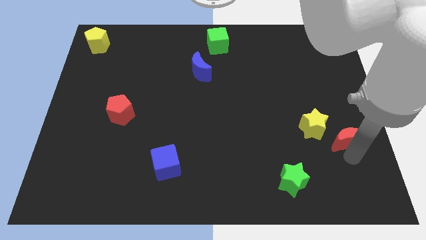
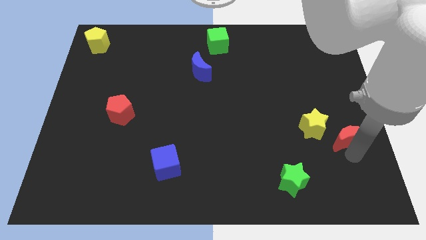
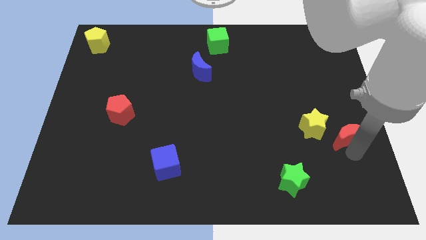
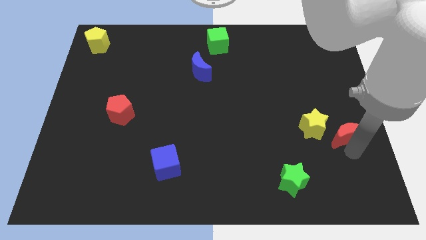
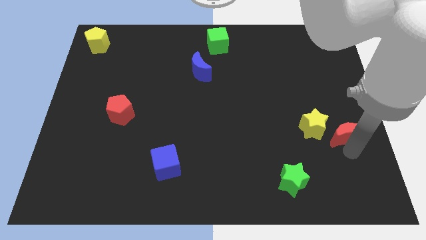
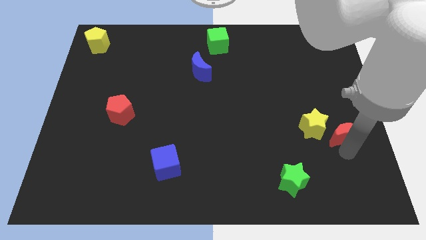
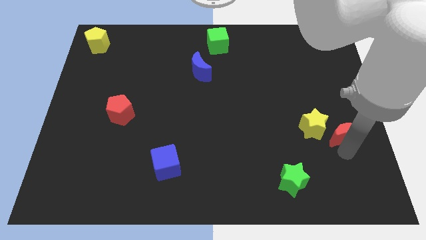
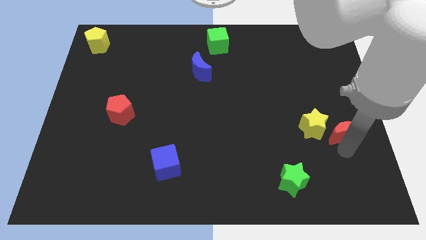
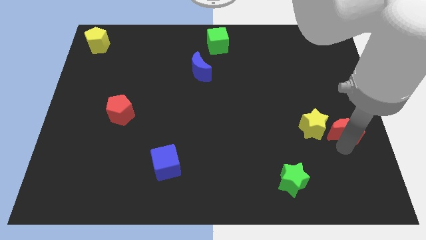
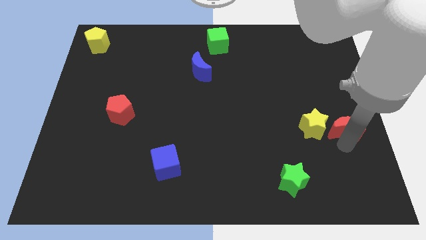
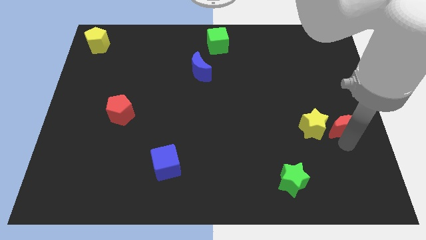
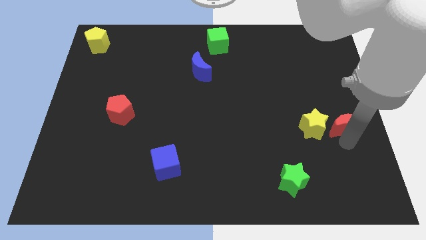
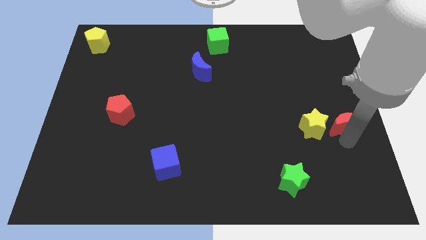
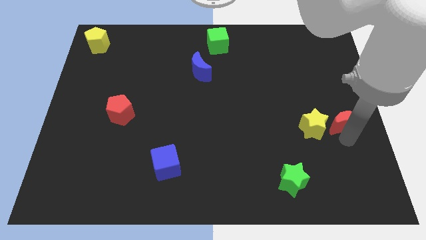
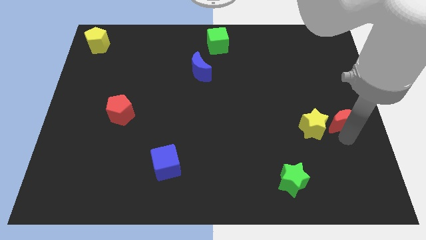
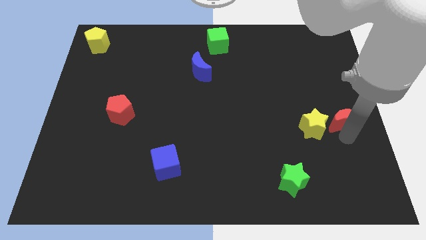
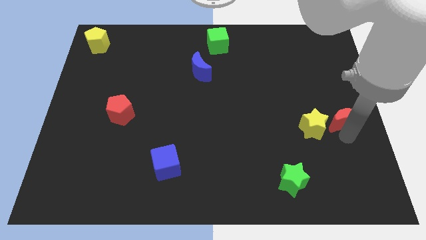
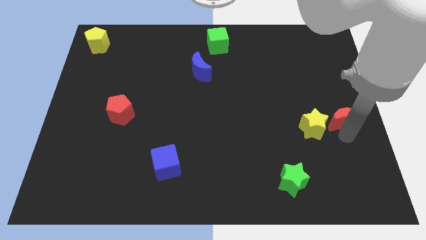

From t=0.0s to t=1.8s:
place the red crescent to the right of the yellow star

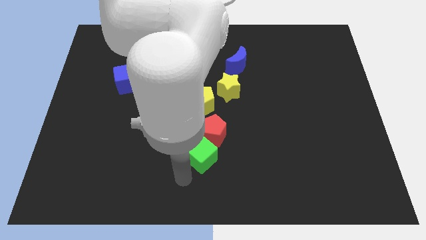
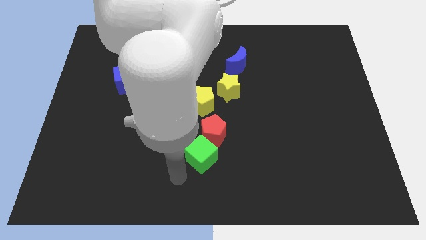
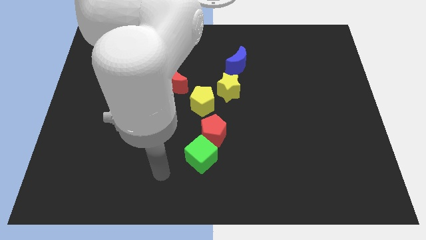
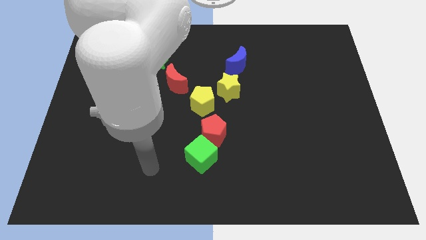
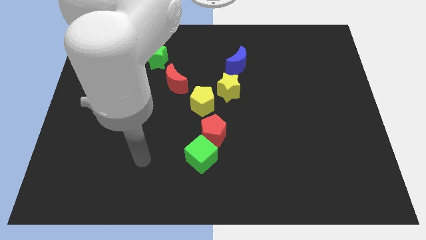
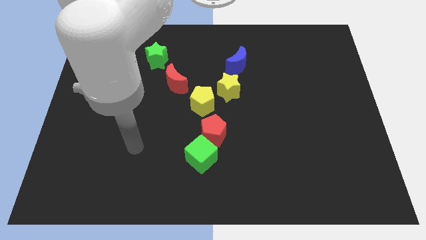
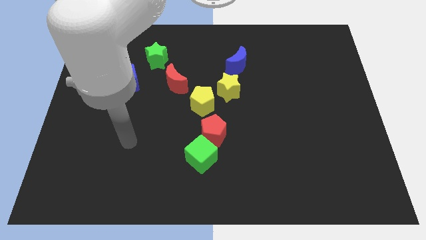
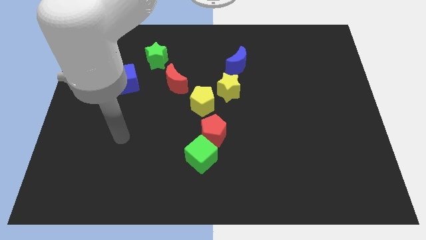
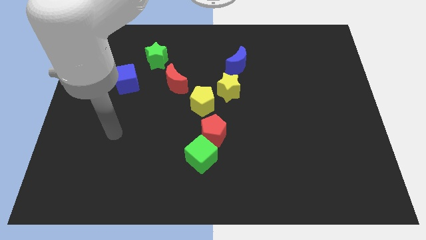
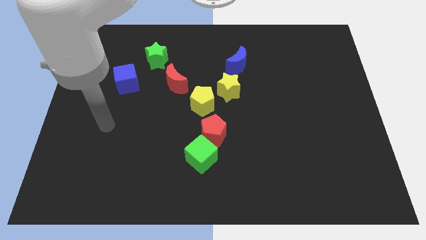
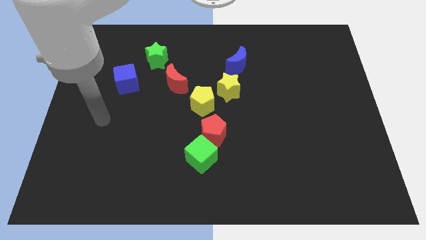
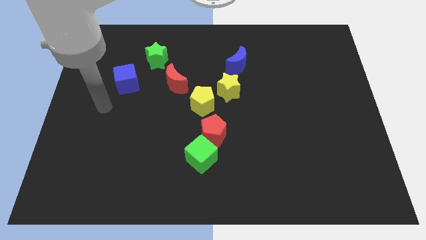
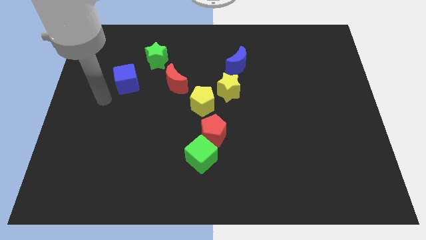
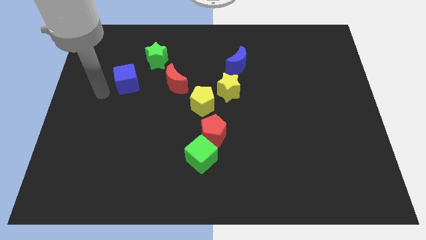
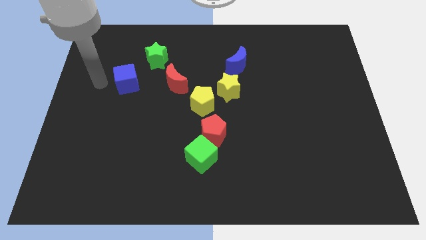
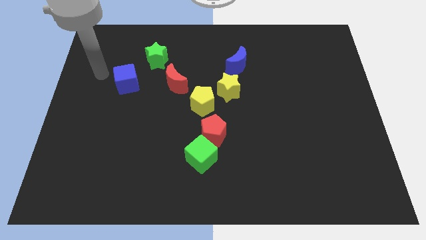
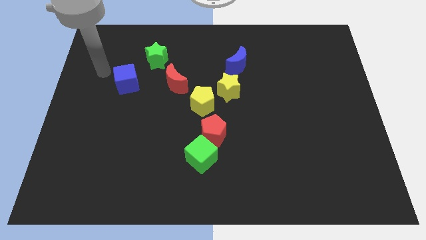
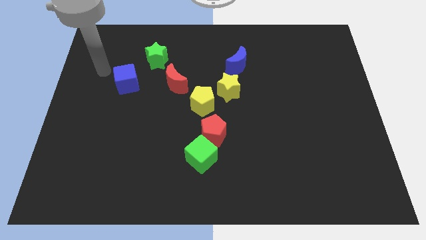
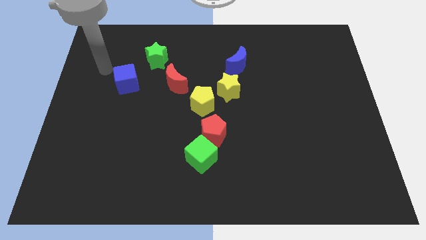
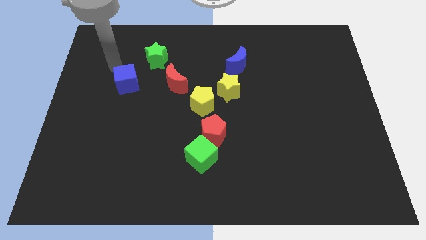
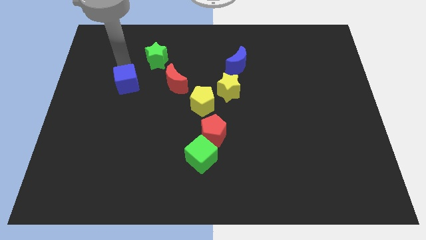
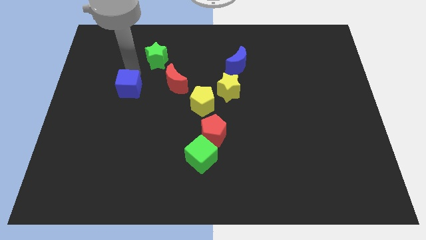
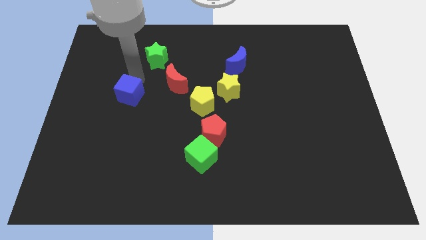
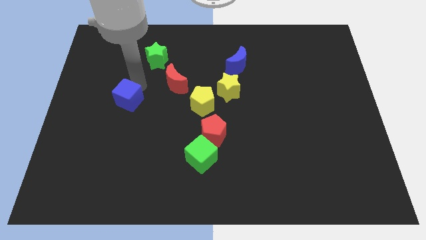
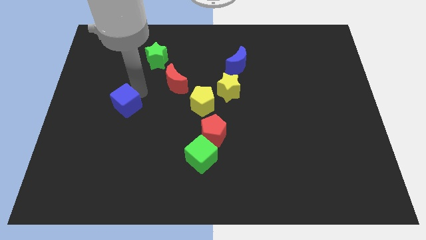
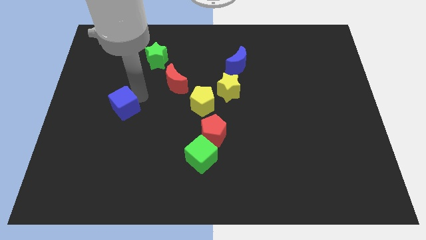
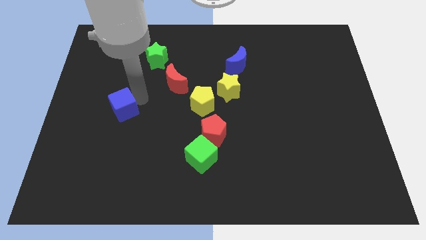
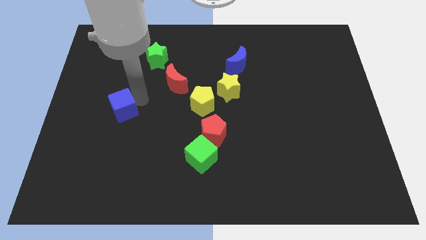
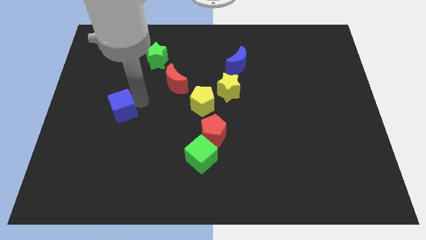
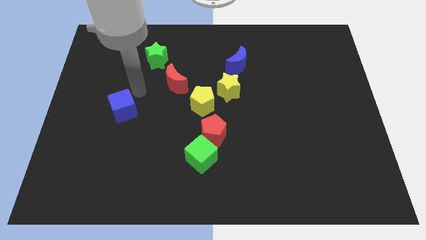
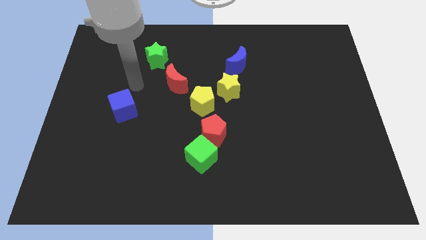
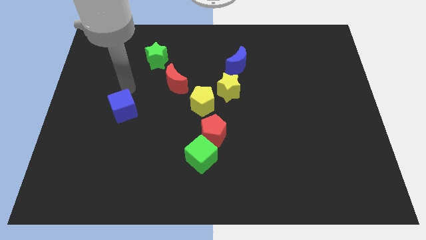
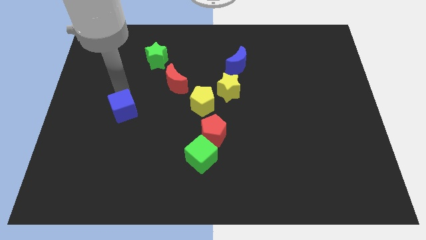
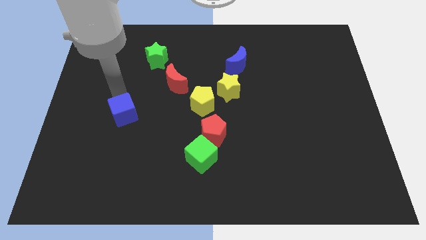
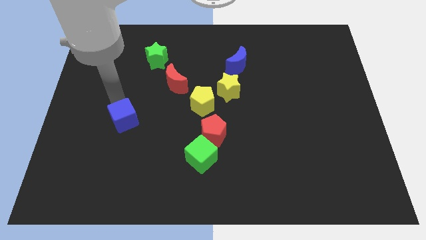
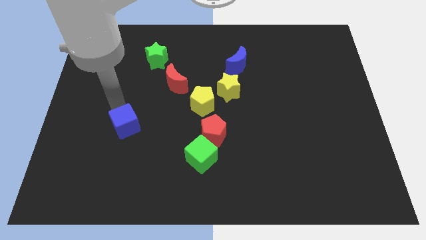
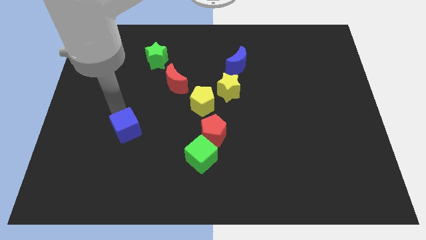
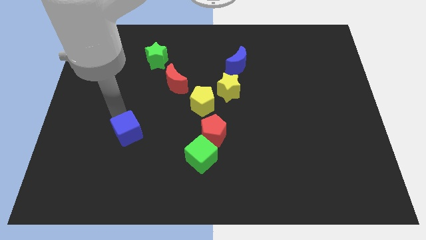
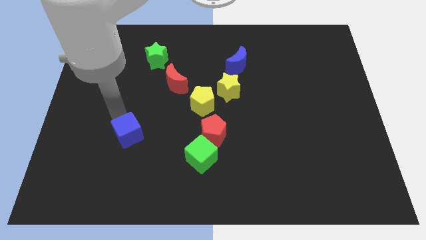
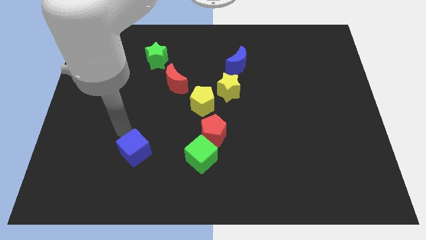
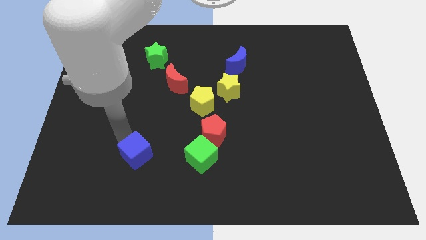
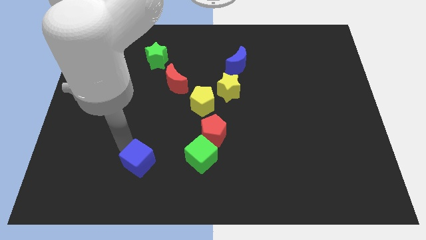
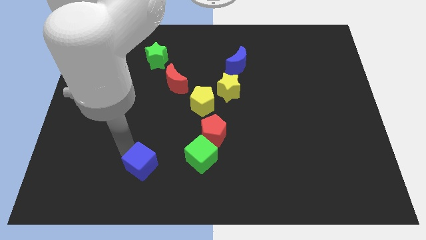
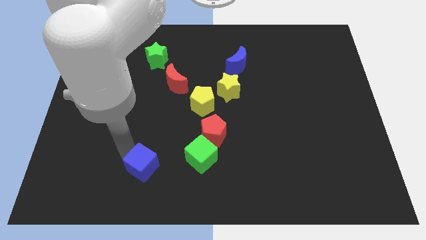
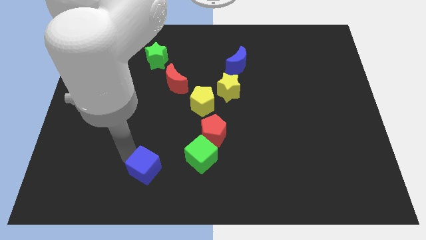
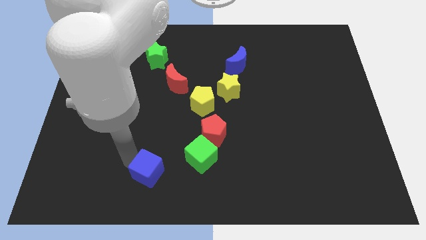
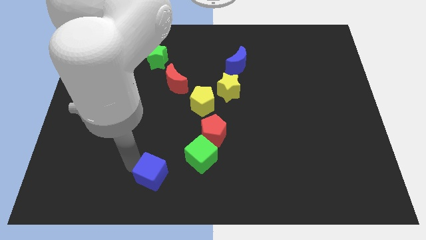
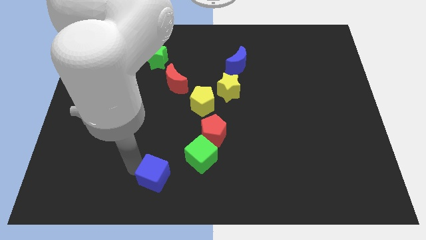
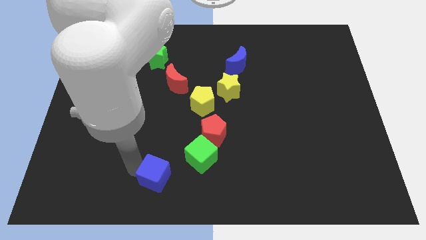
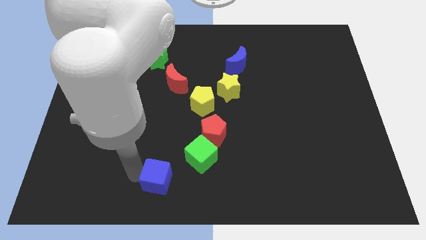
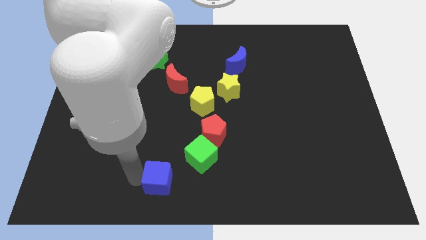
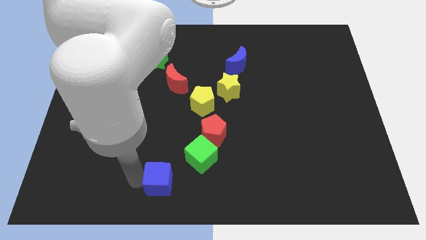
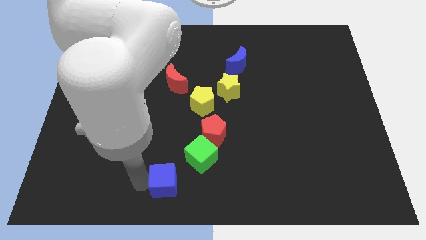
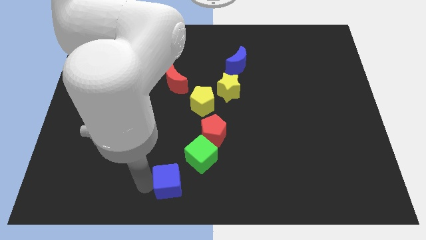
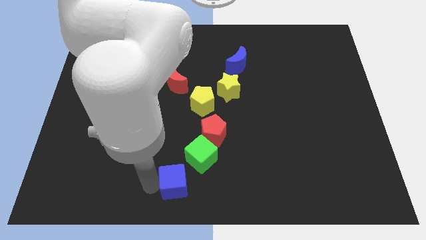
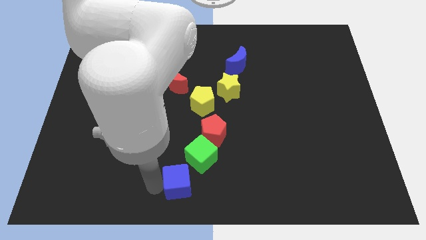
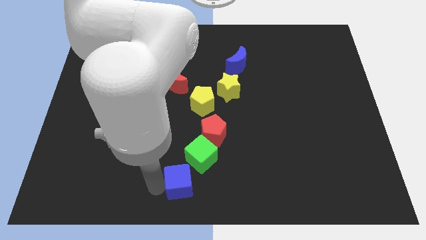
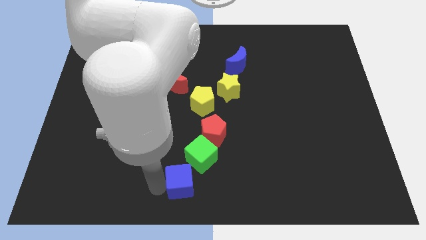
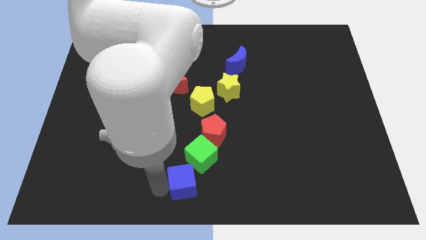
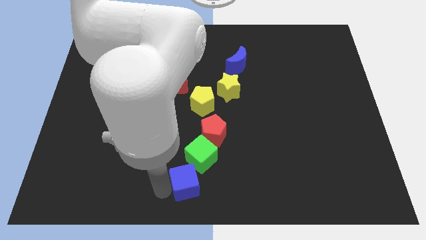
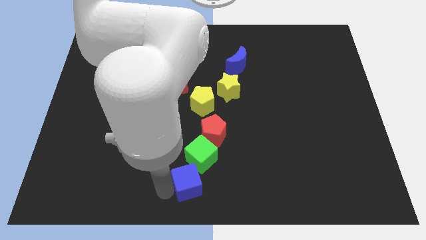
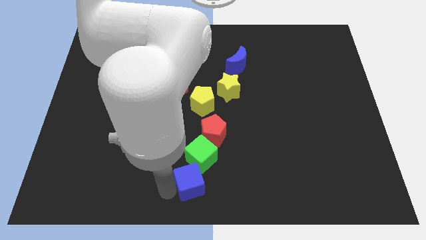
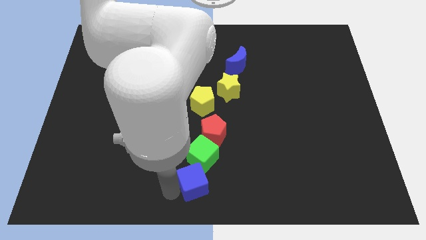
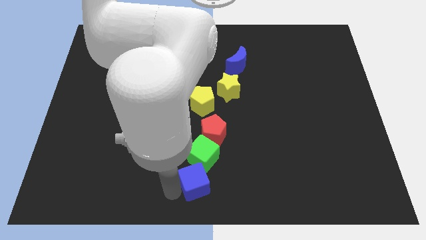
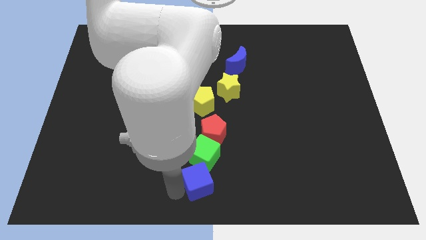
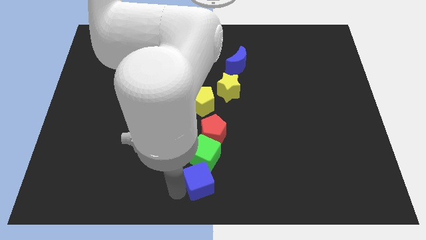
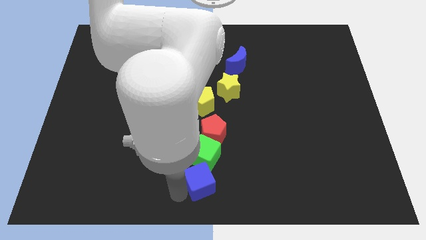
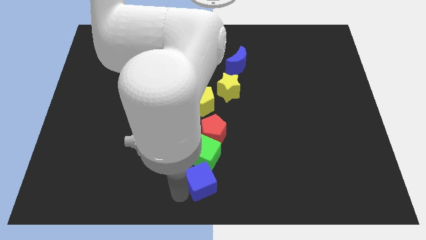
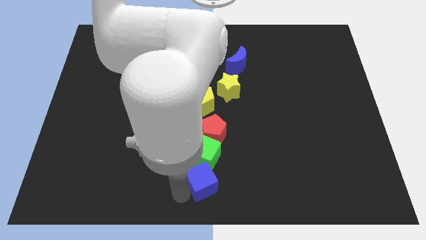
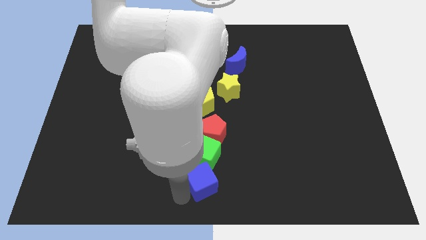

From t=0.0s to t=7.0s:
place the blue cube below the green cube
